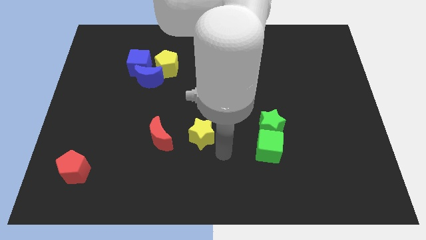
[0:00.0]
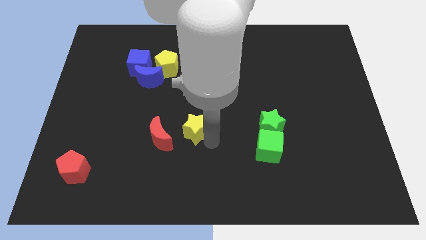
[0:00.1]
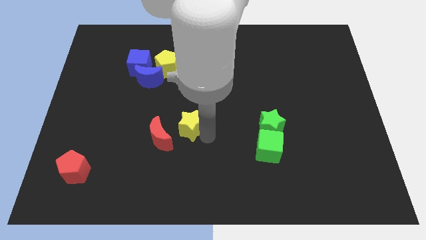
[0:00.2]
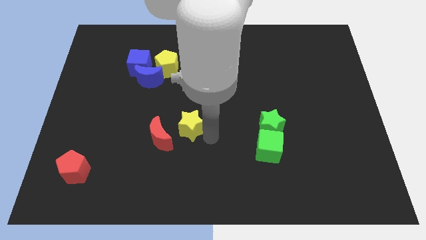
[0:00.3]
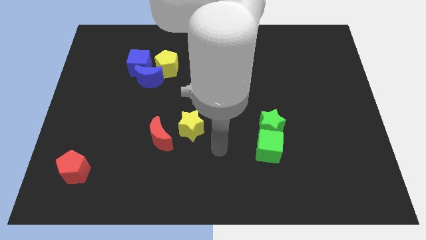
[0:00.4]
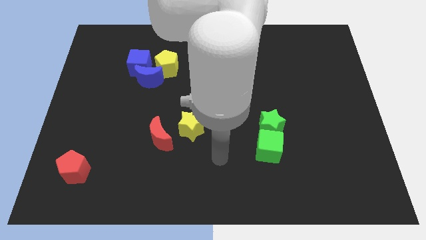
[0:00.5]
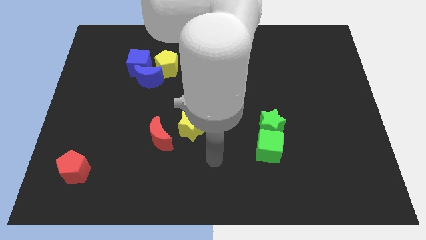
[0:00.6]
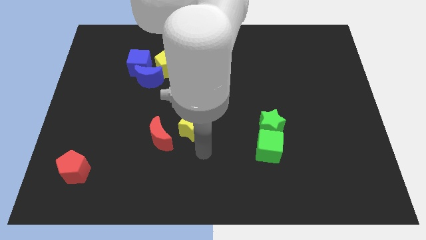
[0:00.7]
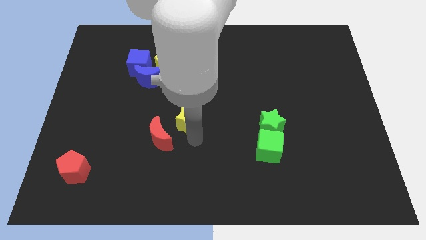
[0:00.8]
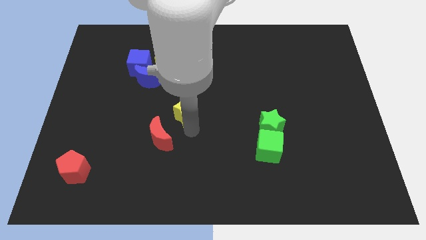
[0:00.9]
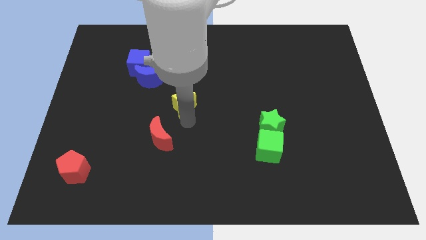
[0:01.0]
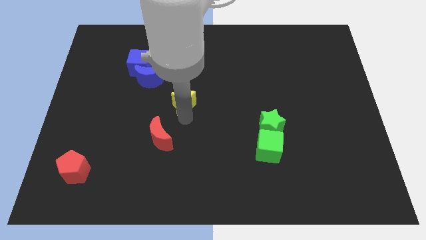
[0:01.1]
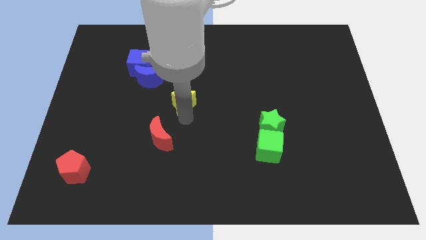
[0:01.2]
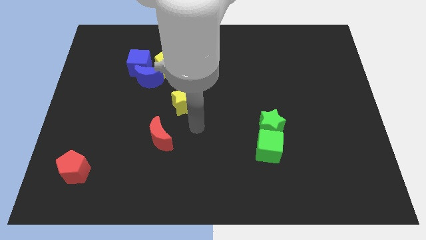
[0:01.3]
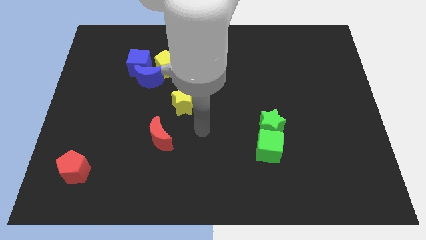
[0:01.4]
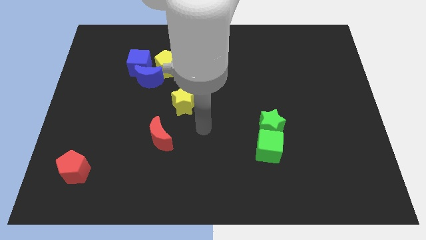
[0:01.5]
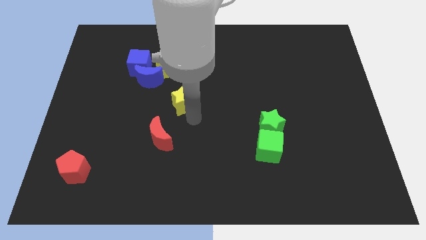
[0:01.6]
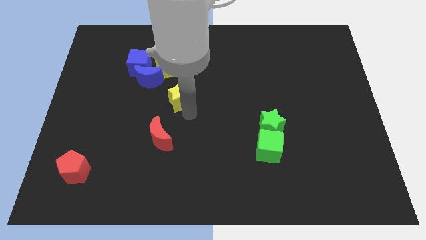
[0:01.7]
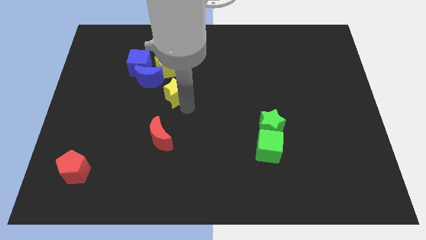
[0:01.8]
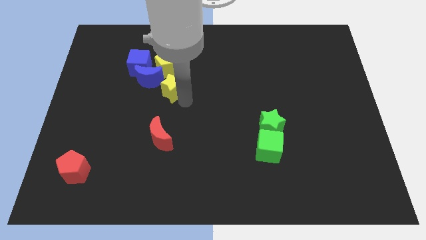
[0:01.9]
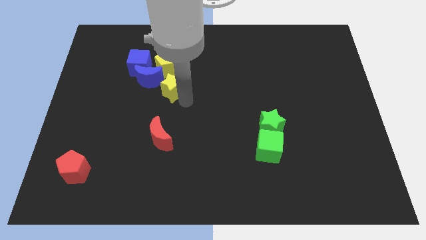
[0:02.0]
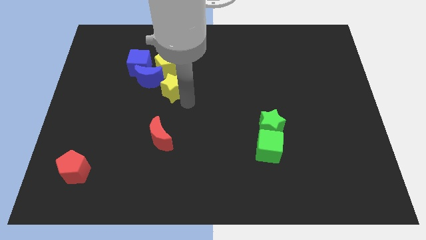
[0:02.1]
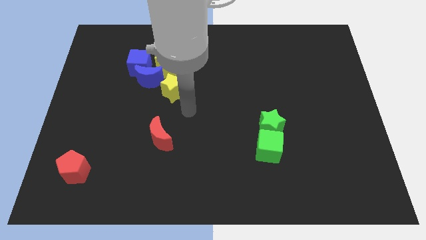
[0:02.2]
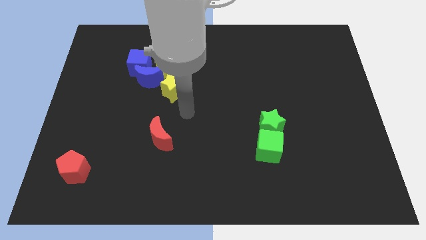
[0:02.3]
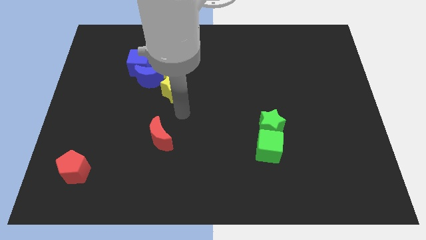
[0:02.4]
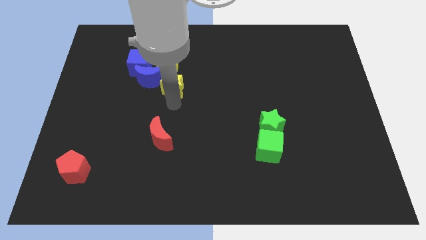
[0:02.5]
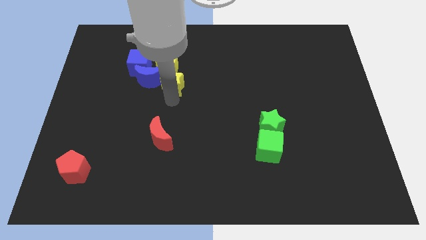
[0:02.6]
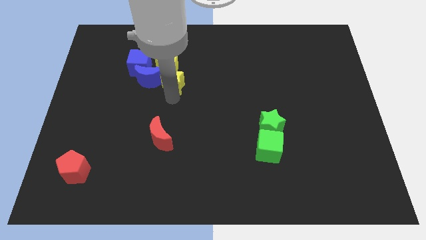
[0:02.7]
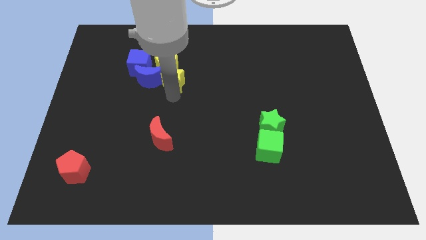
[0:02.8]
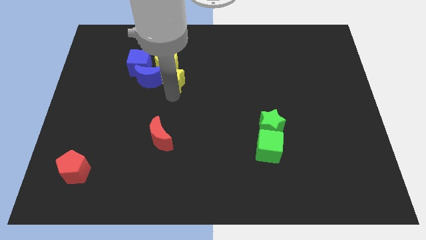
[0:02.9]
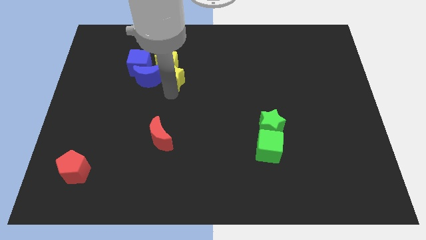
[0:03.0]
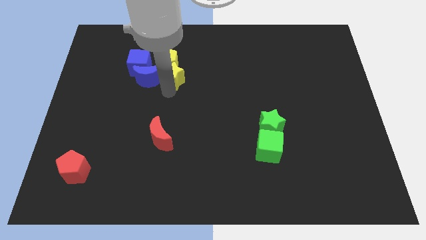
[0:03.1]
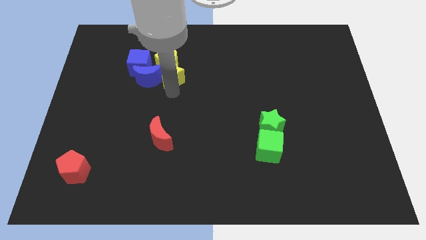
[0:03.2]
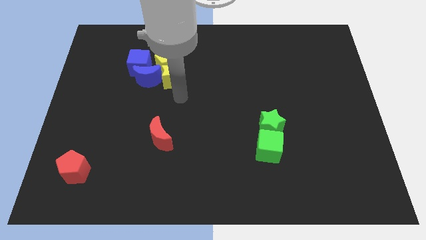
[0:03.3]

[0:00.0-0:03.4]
push the yellow star into the yellow pentagon

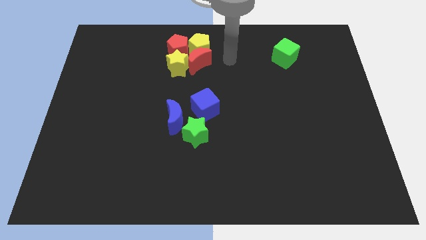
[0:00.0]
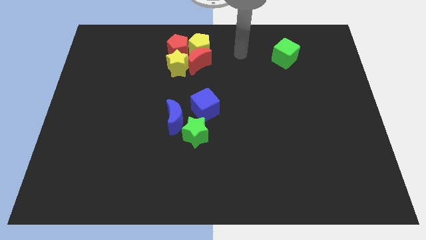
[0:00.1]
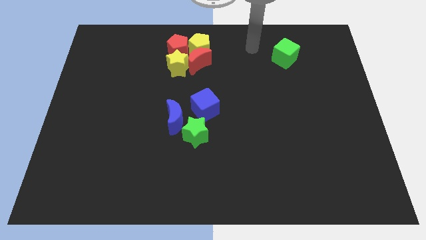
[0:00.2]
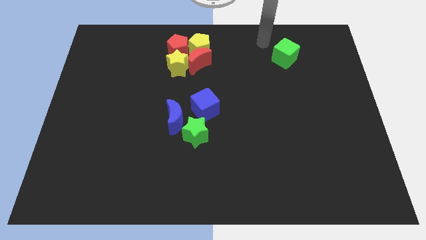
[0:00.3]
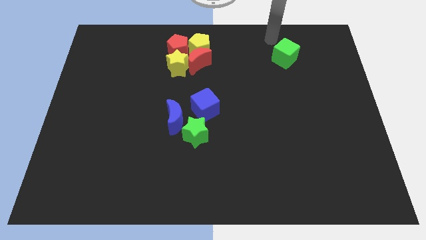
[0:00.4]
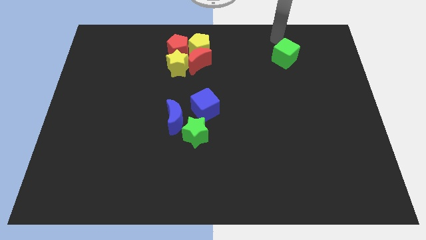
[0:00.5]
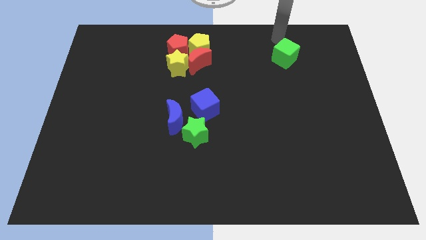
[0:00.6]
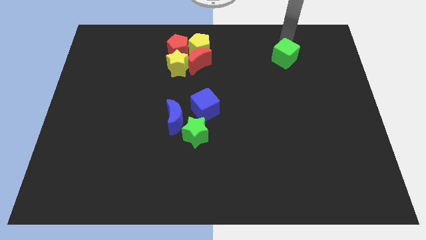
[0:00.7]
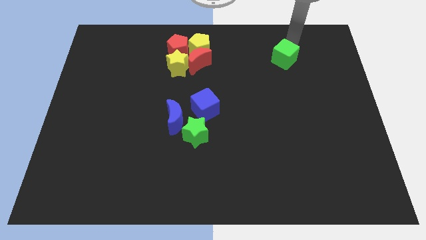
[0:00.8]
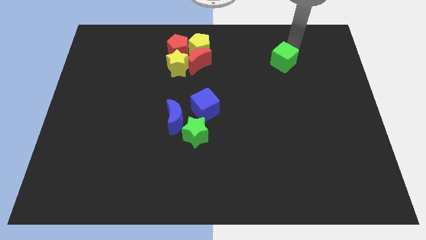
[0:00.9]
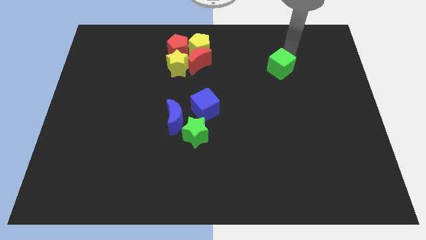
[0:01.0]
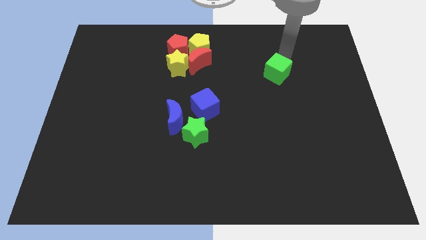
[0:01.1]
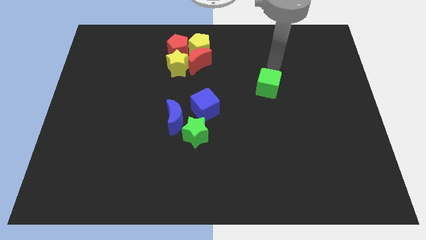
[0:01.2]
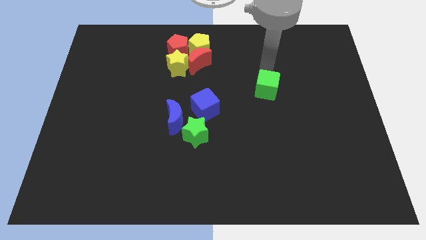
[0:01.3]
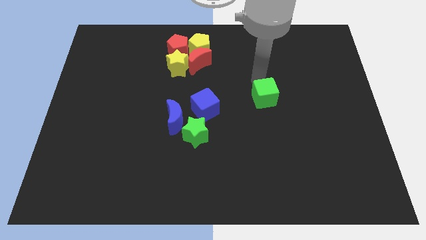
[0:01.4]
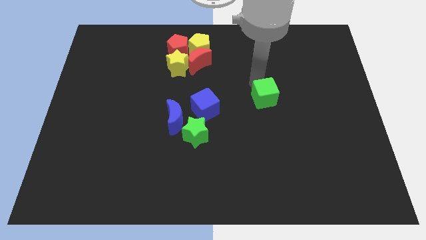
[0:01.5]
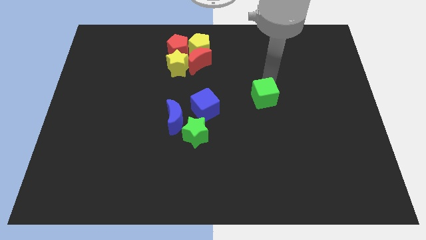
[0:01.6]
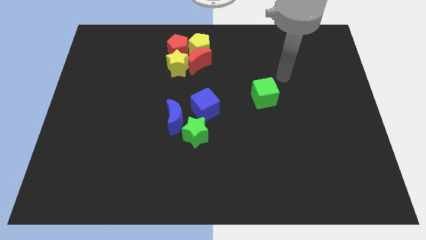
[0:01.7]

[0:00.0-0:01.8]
push the green cube downward diagonally

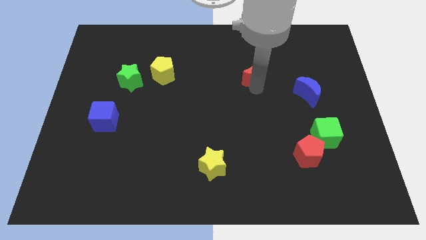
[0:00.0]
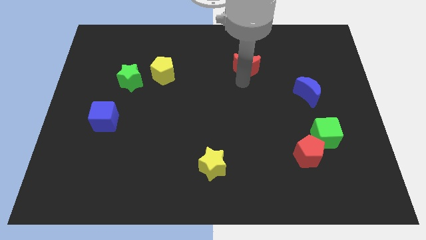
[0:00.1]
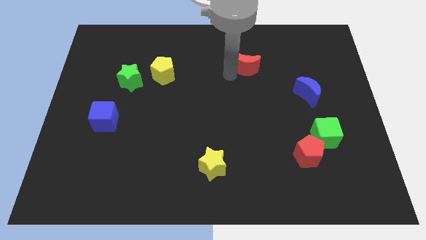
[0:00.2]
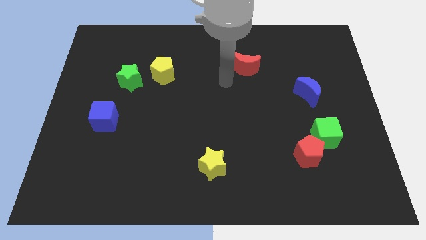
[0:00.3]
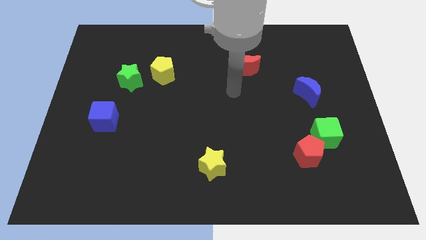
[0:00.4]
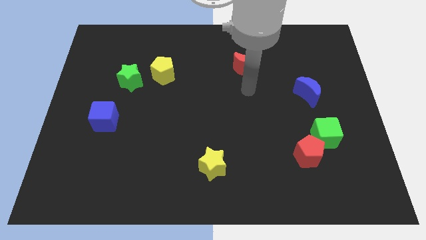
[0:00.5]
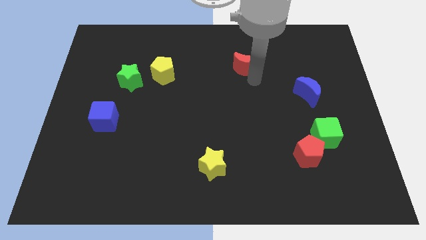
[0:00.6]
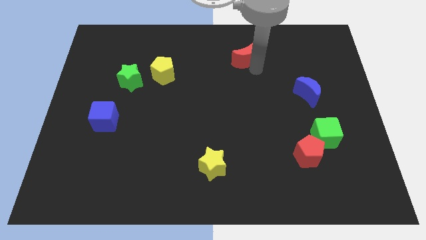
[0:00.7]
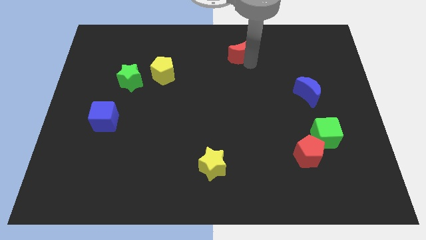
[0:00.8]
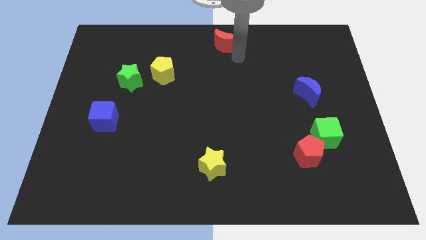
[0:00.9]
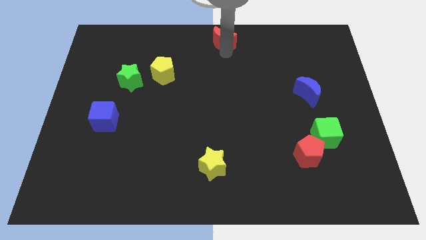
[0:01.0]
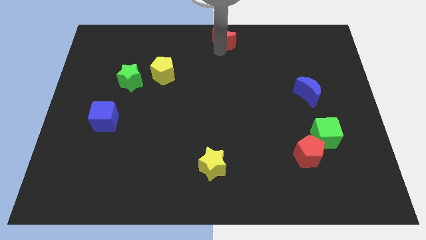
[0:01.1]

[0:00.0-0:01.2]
push the red moon to the top center of the board

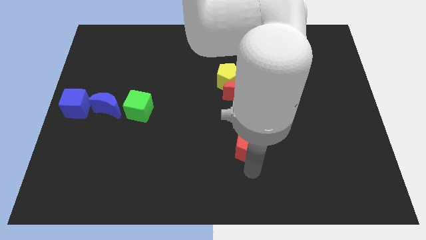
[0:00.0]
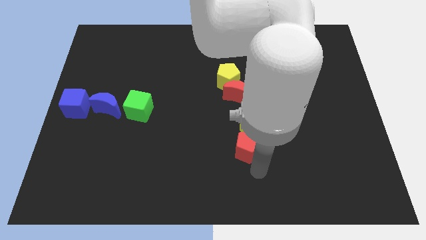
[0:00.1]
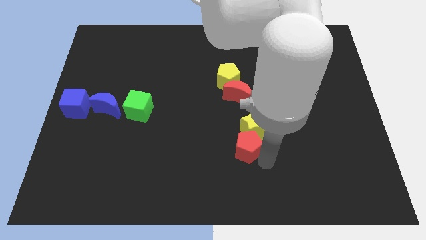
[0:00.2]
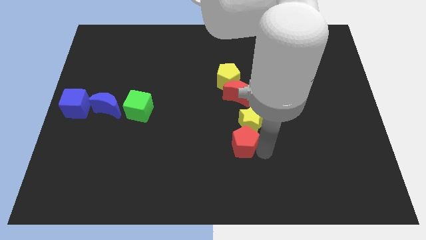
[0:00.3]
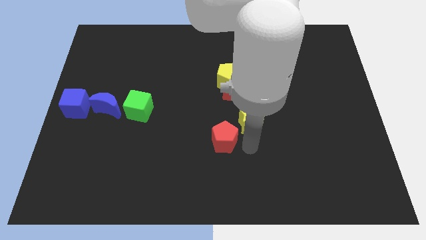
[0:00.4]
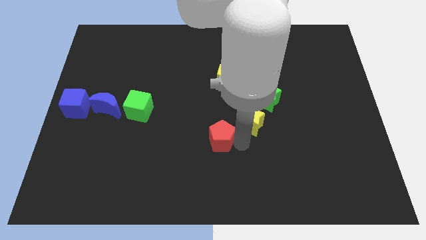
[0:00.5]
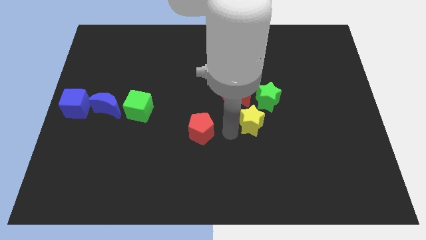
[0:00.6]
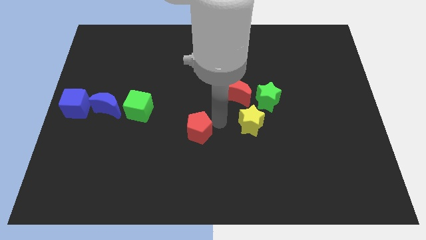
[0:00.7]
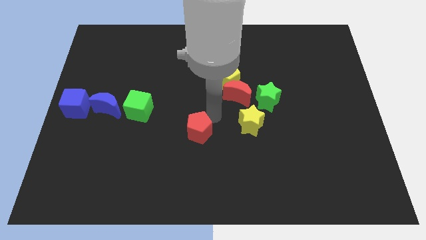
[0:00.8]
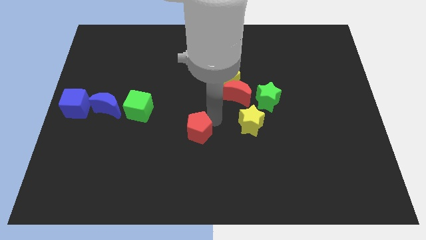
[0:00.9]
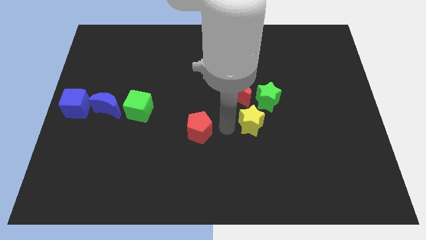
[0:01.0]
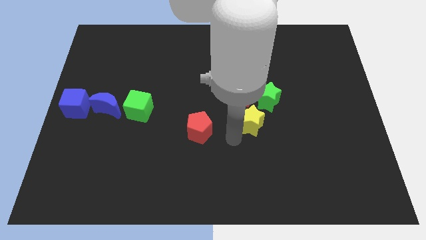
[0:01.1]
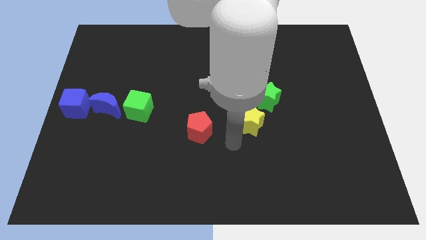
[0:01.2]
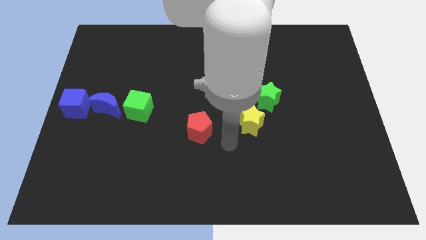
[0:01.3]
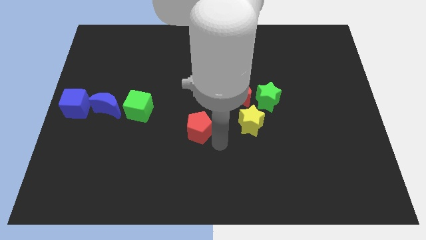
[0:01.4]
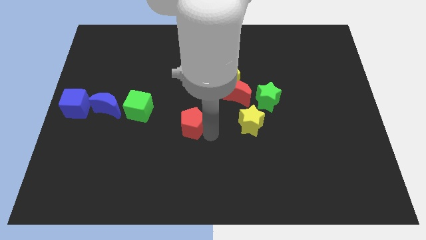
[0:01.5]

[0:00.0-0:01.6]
separate the red pentagon away from the yellow star

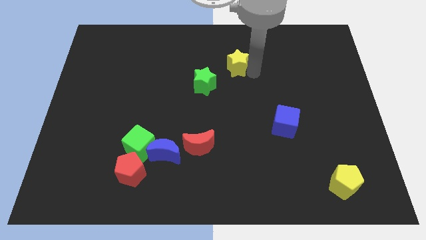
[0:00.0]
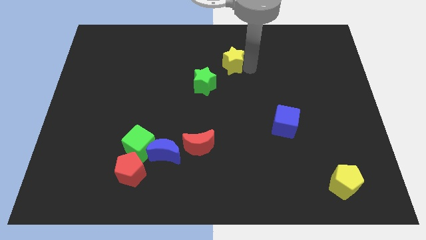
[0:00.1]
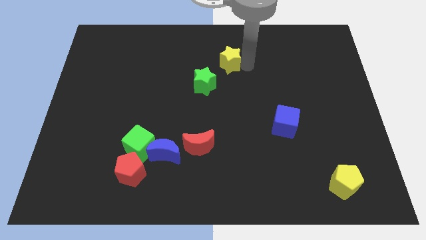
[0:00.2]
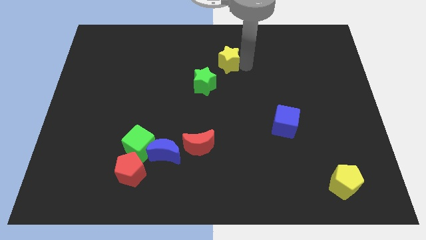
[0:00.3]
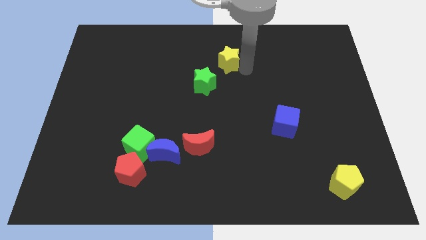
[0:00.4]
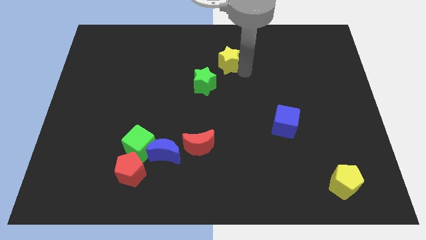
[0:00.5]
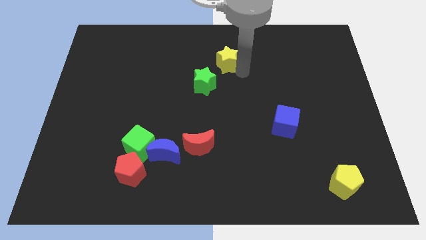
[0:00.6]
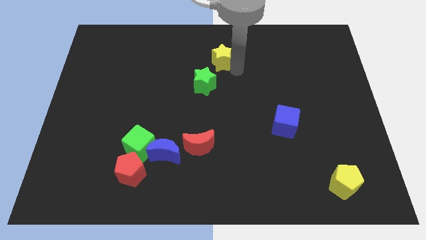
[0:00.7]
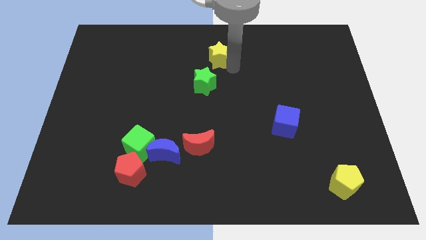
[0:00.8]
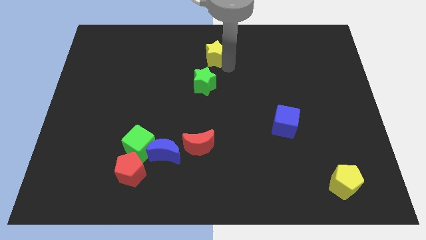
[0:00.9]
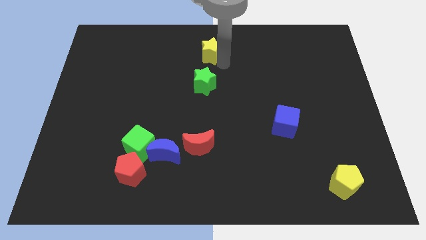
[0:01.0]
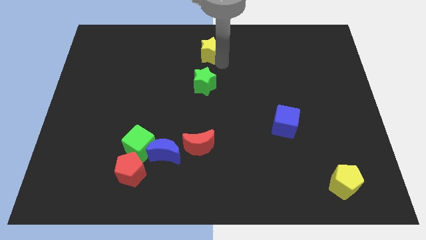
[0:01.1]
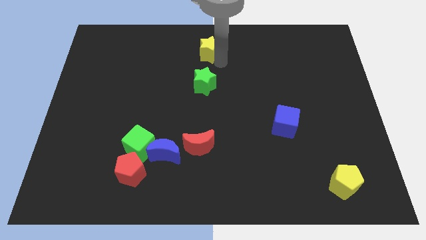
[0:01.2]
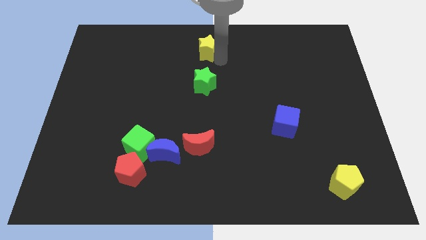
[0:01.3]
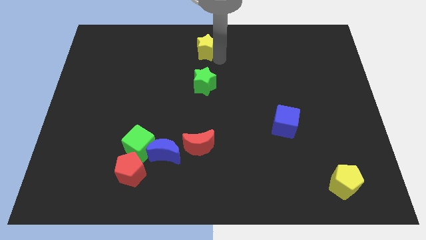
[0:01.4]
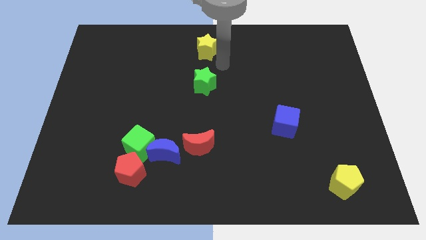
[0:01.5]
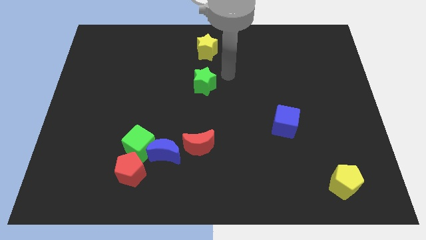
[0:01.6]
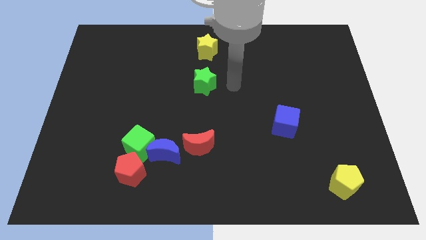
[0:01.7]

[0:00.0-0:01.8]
put the yellow star to the top side of the green star
